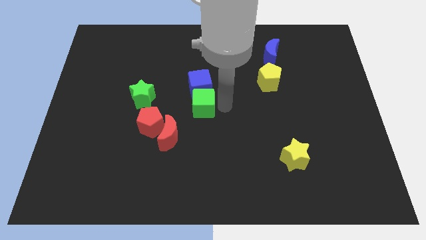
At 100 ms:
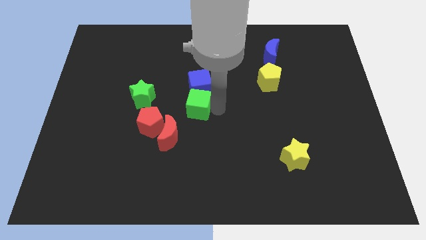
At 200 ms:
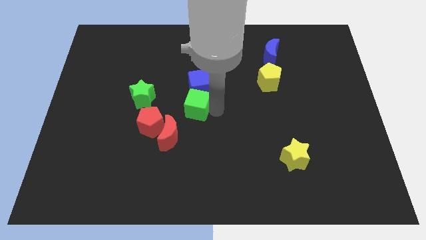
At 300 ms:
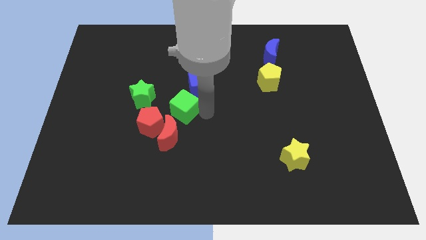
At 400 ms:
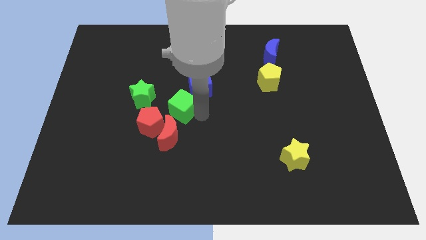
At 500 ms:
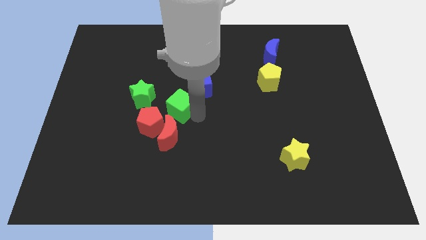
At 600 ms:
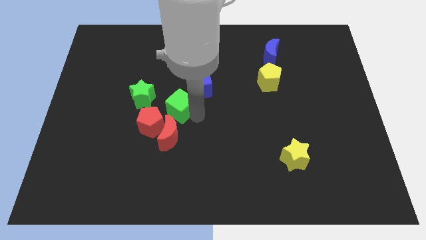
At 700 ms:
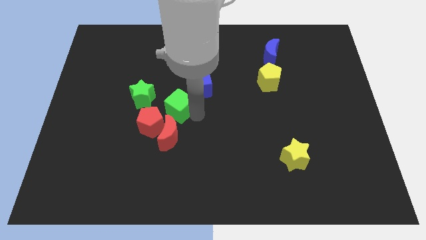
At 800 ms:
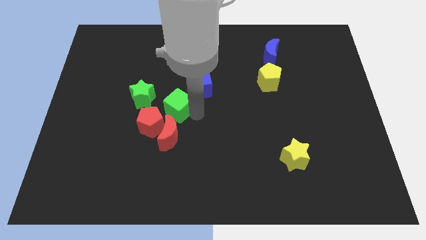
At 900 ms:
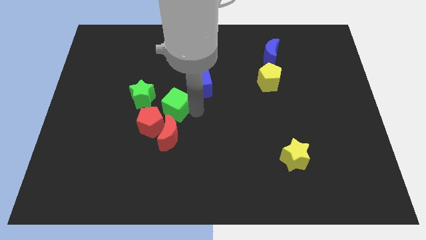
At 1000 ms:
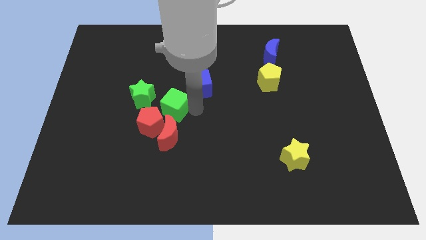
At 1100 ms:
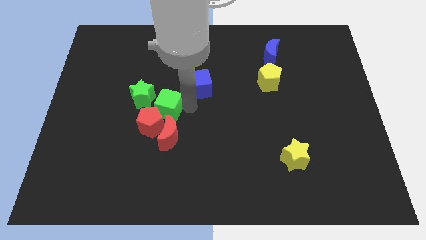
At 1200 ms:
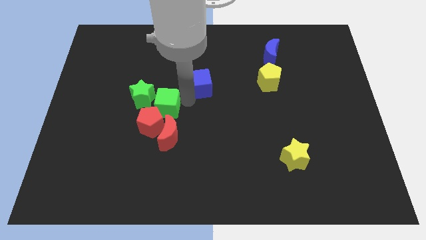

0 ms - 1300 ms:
move green cube near green star

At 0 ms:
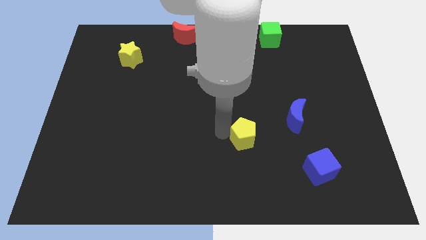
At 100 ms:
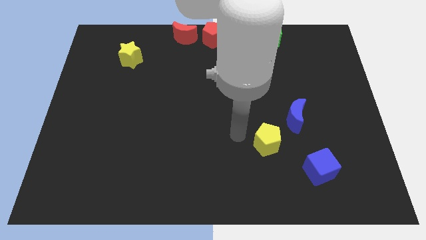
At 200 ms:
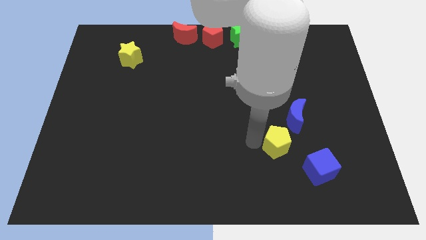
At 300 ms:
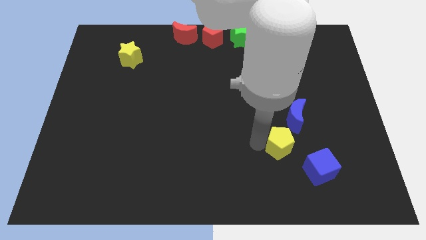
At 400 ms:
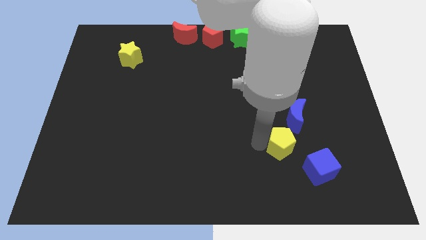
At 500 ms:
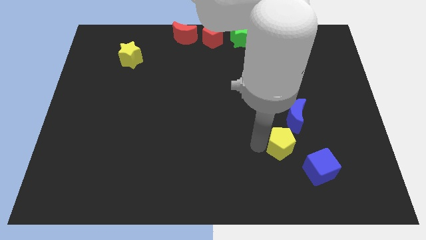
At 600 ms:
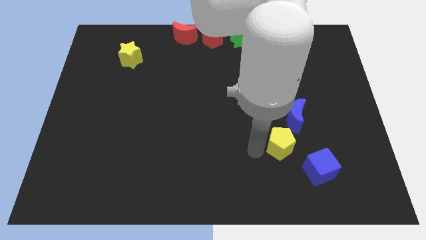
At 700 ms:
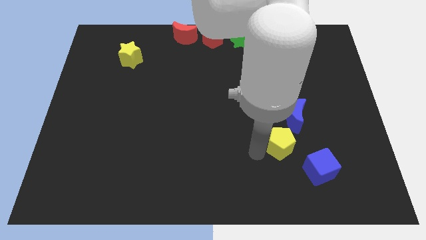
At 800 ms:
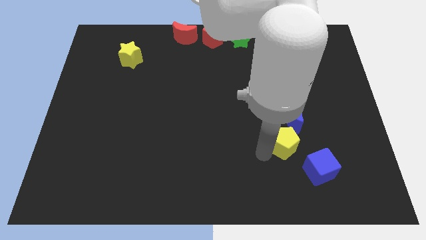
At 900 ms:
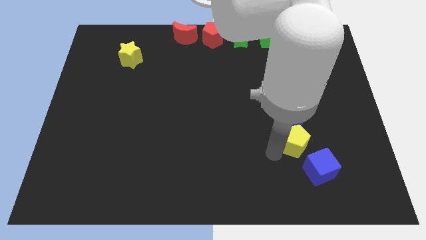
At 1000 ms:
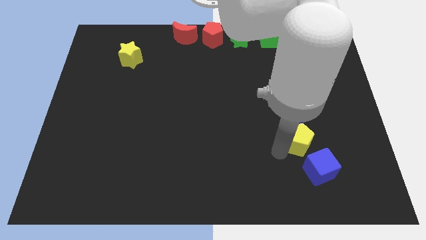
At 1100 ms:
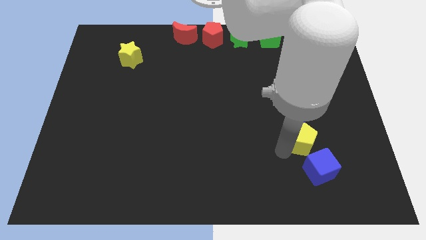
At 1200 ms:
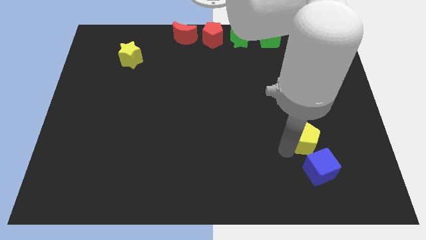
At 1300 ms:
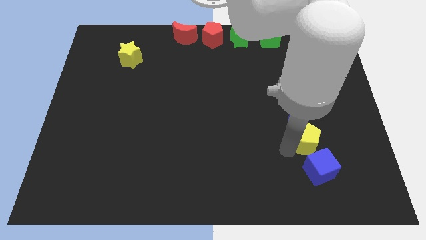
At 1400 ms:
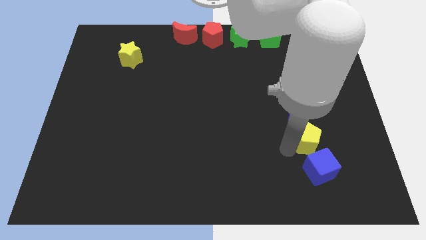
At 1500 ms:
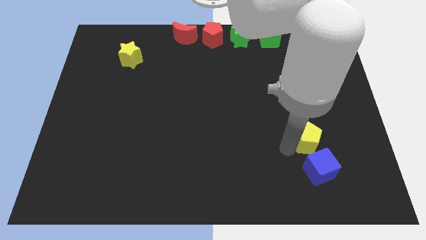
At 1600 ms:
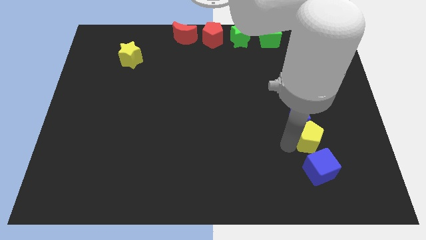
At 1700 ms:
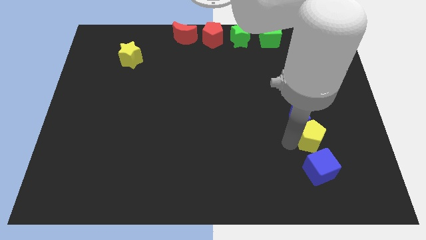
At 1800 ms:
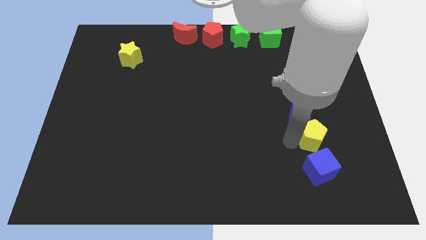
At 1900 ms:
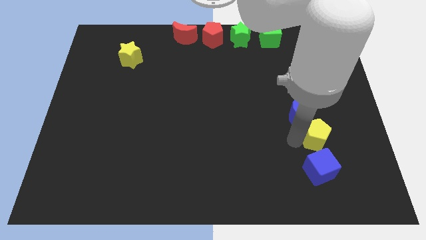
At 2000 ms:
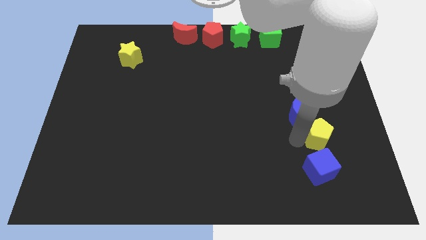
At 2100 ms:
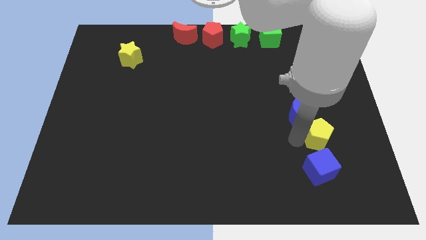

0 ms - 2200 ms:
place the yellow pentagon in between blue crescent and blue cube

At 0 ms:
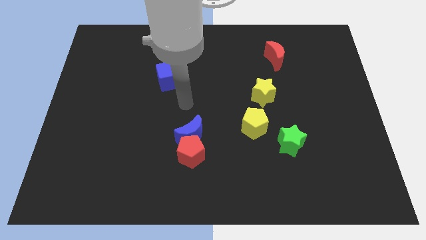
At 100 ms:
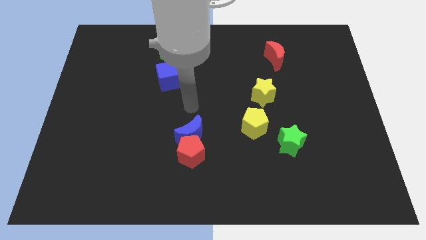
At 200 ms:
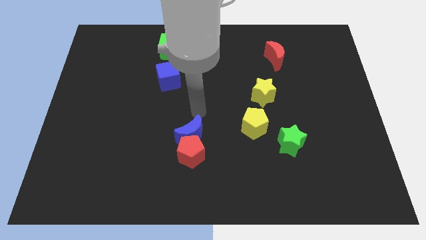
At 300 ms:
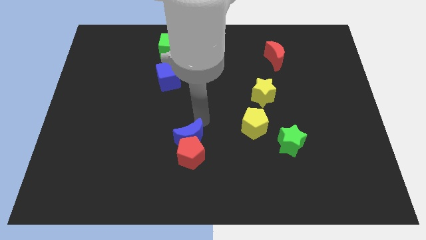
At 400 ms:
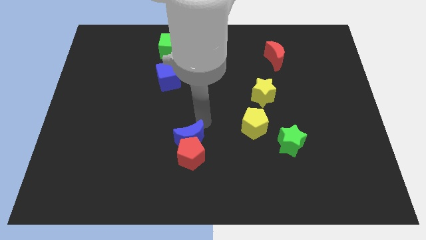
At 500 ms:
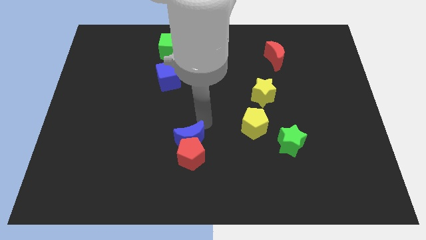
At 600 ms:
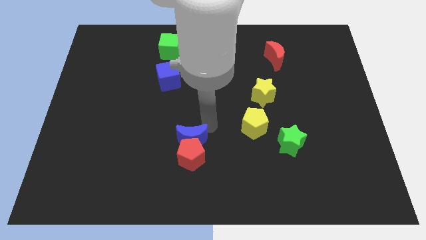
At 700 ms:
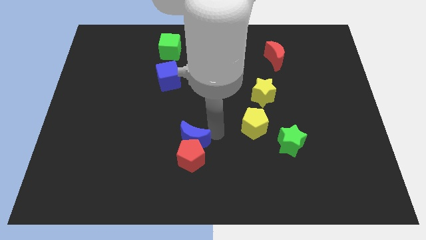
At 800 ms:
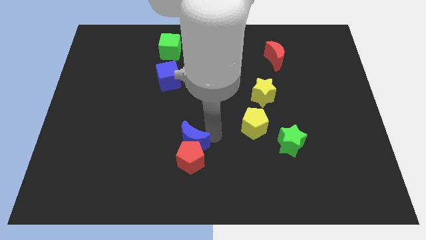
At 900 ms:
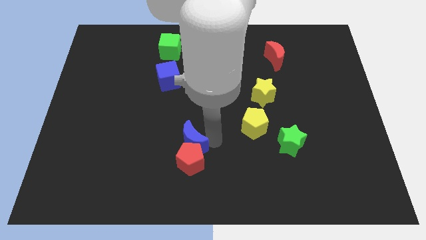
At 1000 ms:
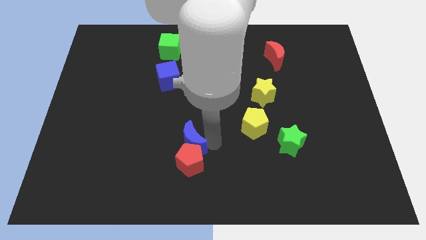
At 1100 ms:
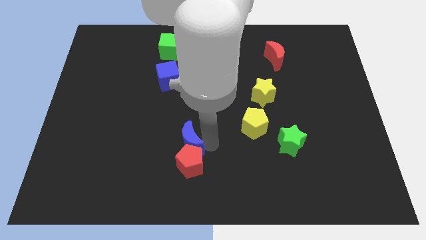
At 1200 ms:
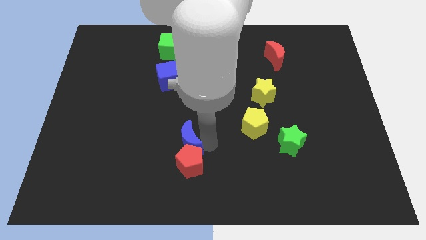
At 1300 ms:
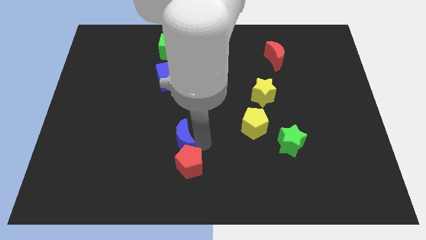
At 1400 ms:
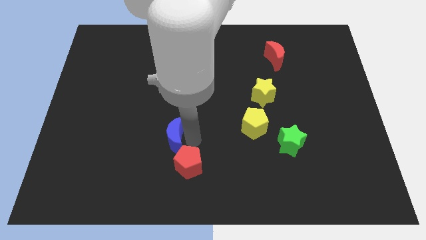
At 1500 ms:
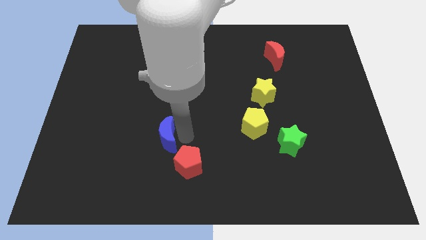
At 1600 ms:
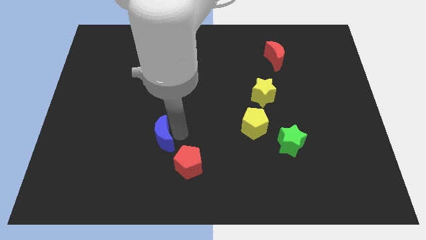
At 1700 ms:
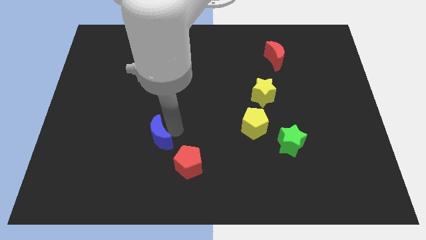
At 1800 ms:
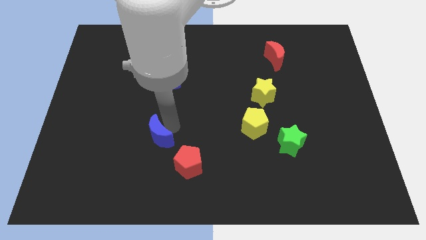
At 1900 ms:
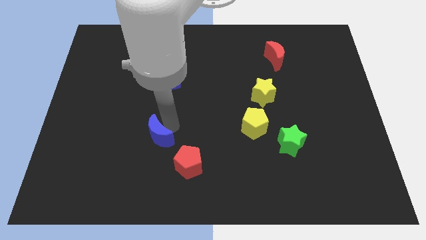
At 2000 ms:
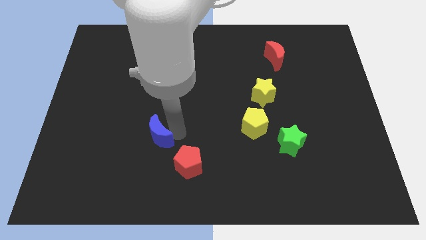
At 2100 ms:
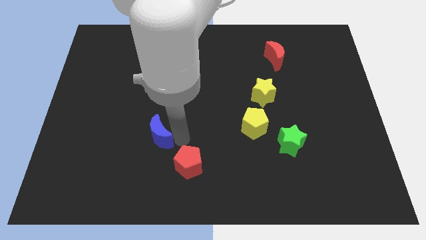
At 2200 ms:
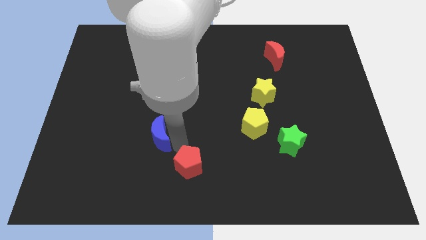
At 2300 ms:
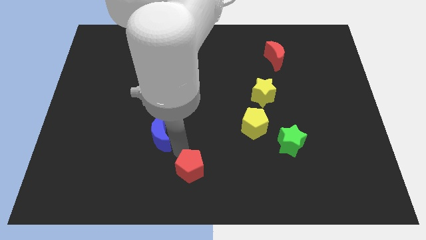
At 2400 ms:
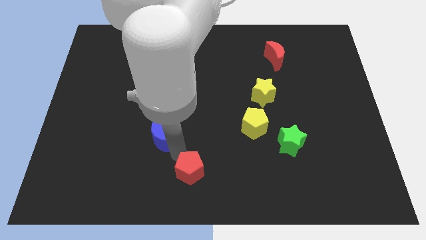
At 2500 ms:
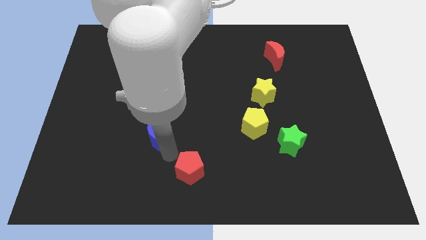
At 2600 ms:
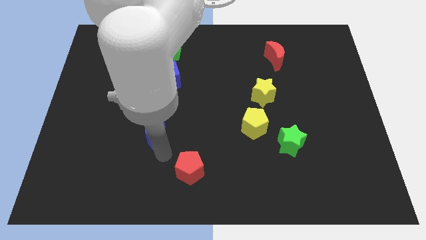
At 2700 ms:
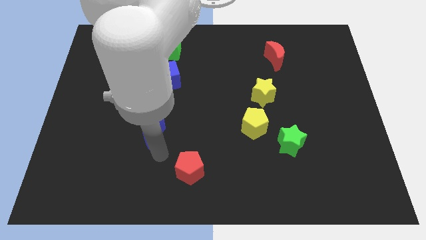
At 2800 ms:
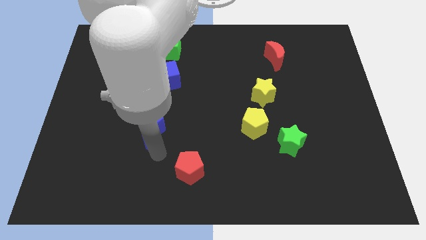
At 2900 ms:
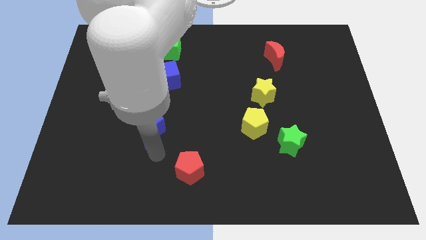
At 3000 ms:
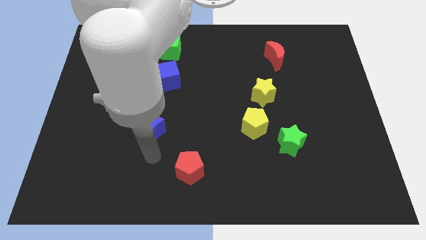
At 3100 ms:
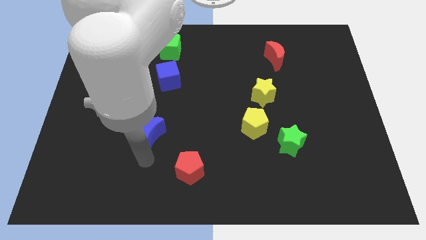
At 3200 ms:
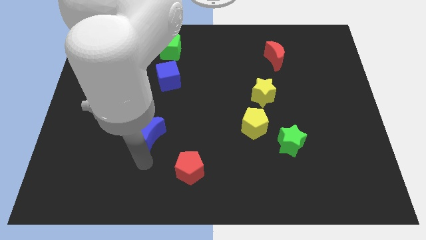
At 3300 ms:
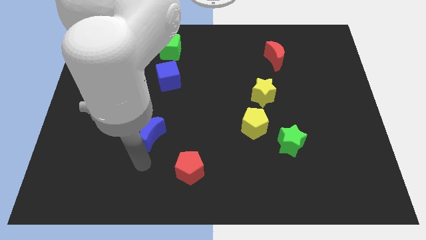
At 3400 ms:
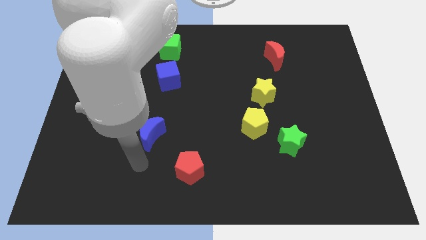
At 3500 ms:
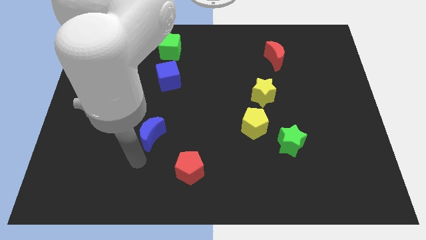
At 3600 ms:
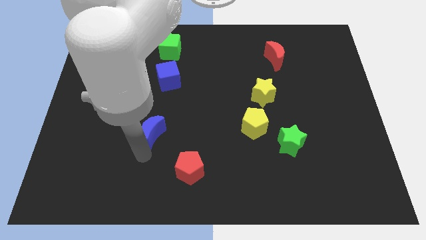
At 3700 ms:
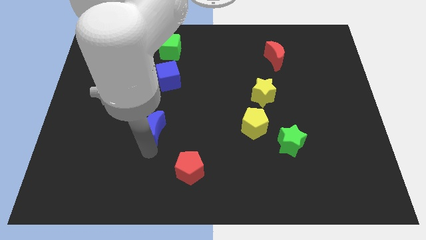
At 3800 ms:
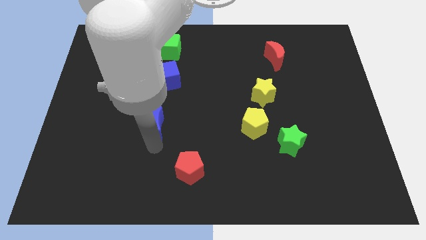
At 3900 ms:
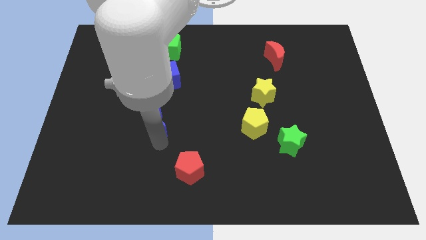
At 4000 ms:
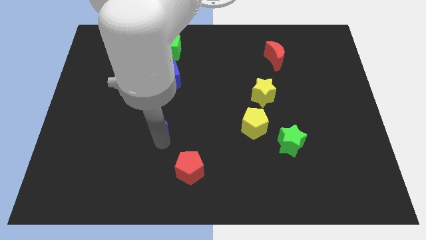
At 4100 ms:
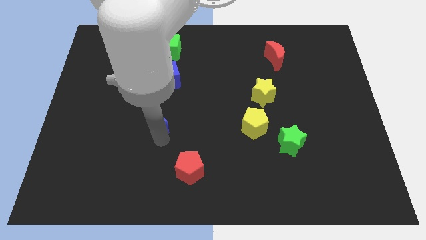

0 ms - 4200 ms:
separate the red pentagon and the blue crescent

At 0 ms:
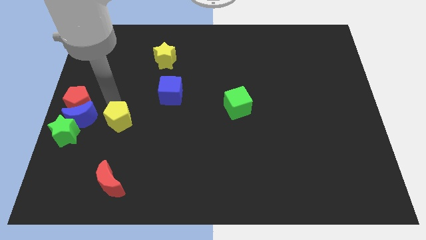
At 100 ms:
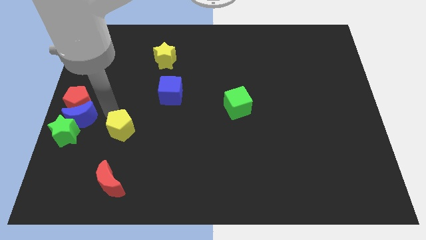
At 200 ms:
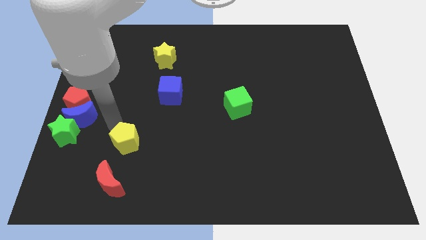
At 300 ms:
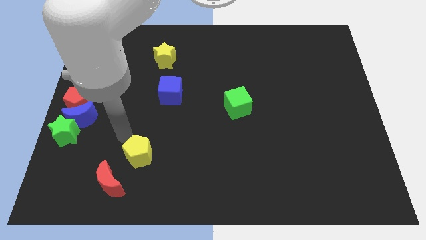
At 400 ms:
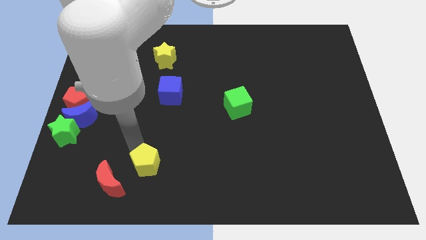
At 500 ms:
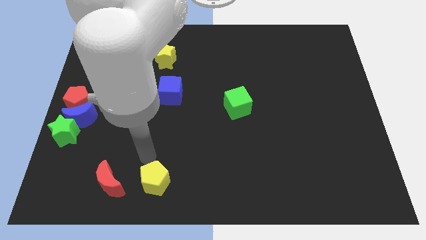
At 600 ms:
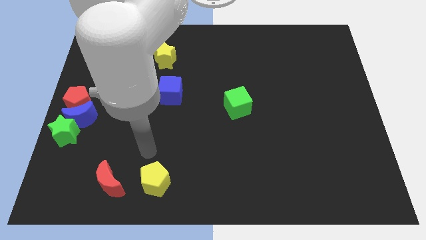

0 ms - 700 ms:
move the yellow pentagon to the right of the red crescent

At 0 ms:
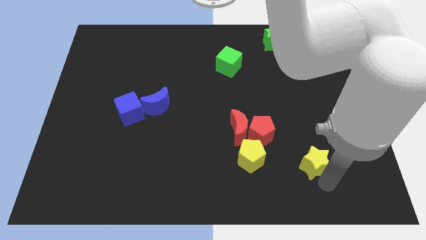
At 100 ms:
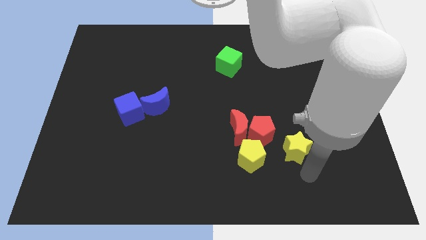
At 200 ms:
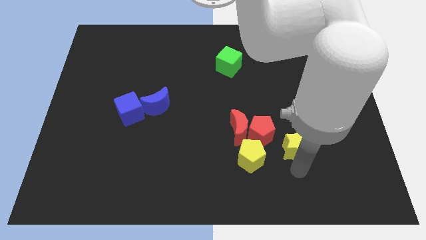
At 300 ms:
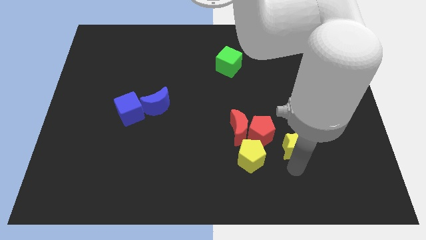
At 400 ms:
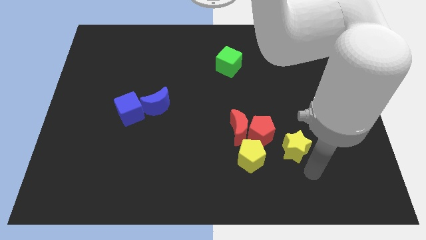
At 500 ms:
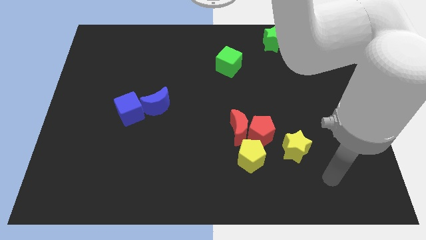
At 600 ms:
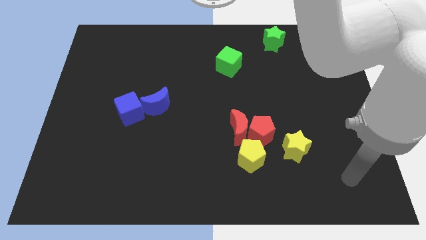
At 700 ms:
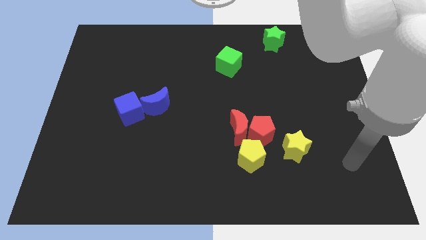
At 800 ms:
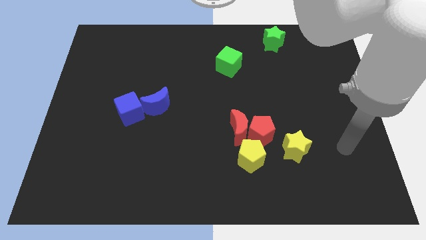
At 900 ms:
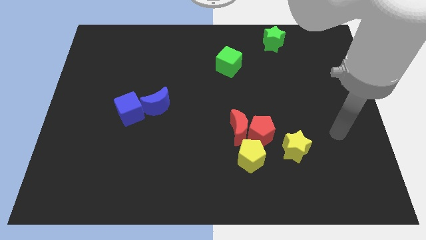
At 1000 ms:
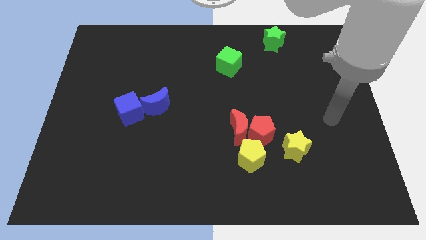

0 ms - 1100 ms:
move yellow star slightly close to the red pentagon
